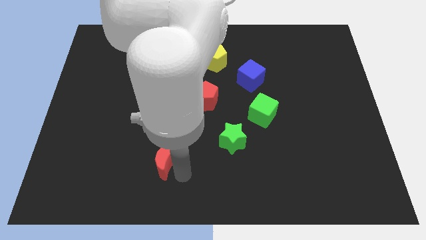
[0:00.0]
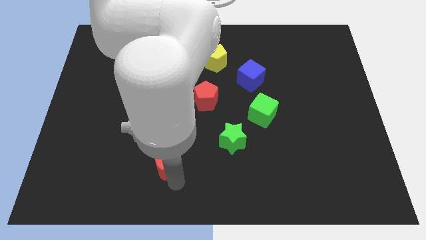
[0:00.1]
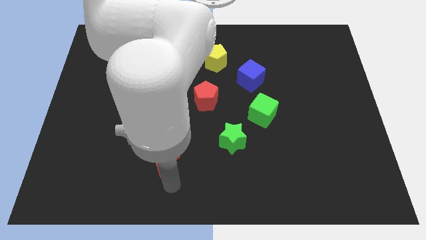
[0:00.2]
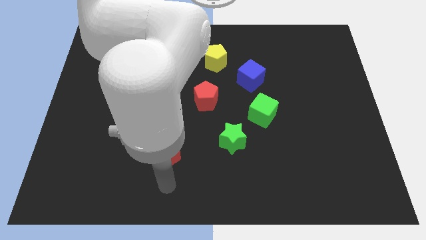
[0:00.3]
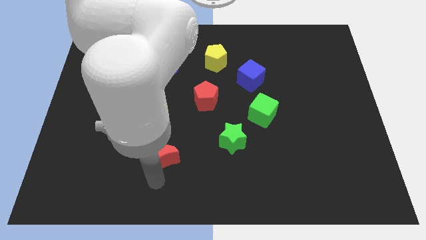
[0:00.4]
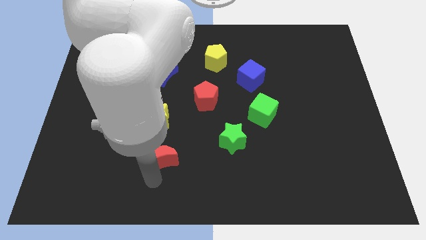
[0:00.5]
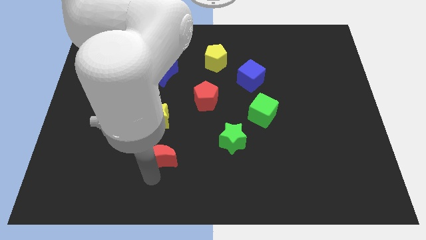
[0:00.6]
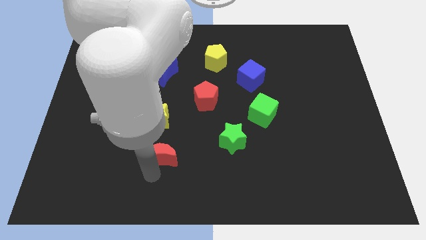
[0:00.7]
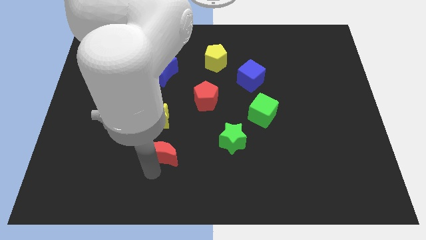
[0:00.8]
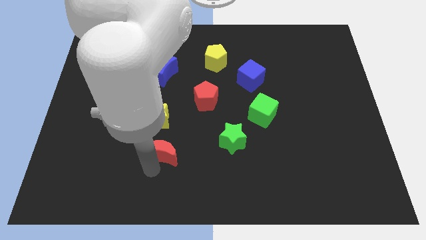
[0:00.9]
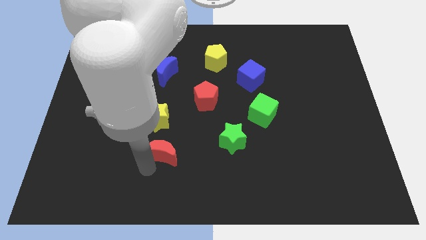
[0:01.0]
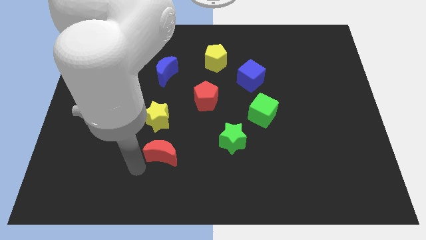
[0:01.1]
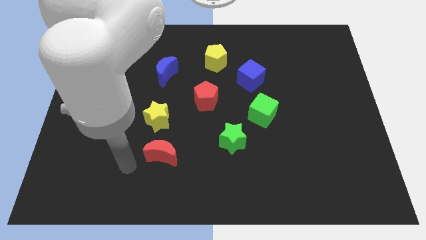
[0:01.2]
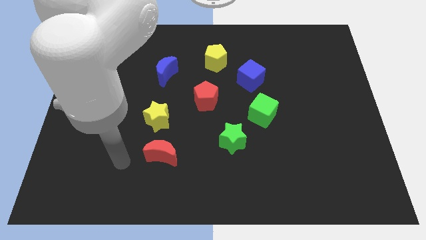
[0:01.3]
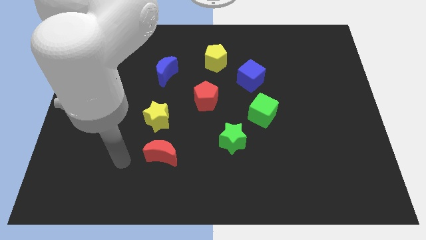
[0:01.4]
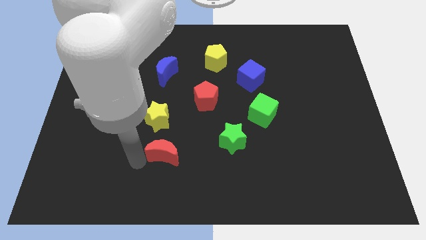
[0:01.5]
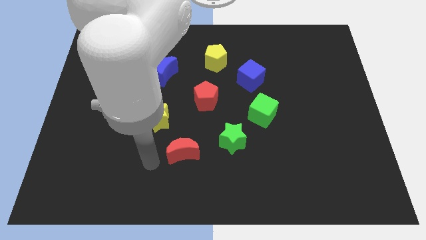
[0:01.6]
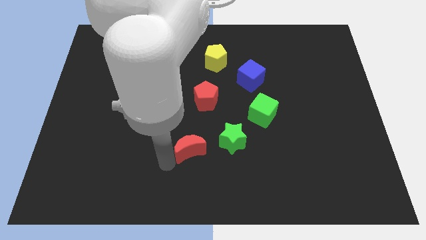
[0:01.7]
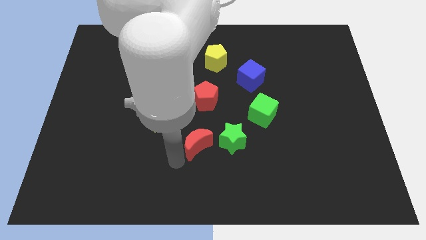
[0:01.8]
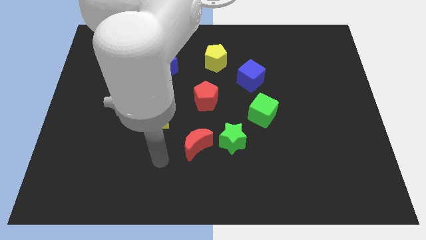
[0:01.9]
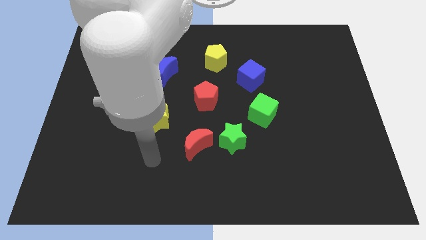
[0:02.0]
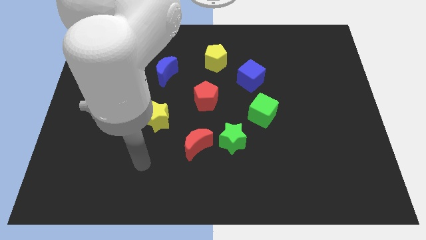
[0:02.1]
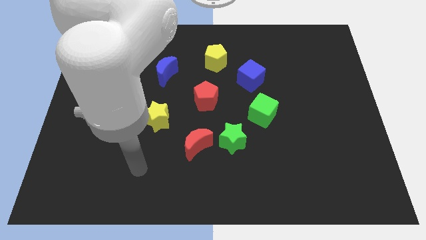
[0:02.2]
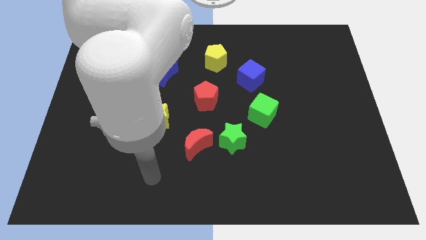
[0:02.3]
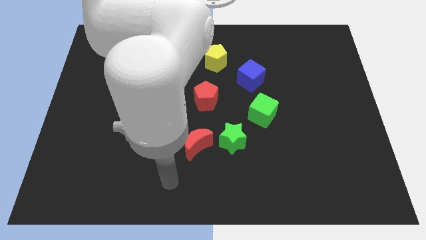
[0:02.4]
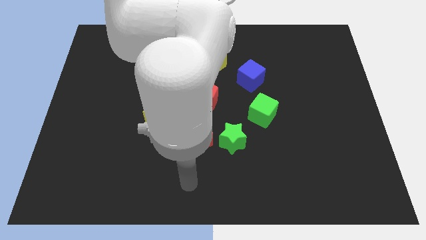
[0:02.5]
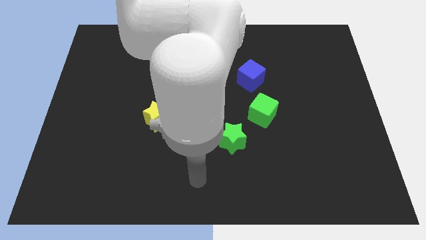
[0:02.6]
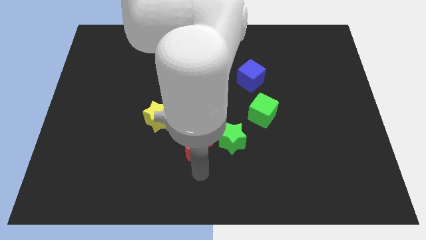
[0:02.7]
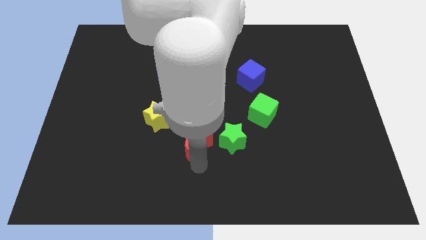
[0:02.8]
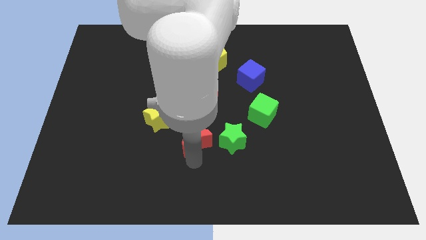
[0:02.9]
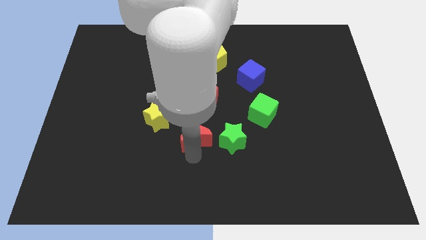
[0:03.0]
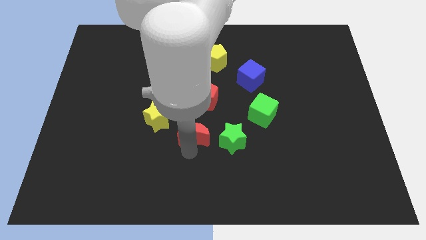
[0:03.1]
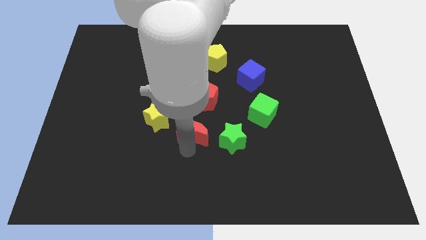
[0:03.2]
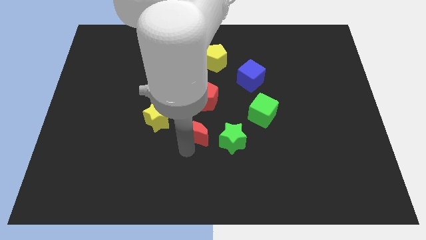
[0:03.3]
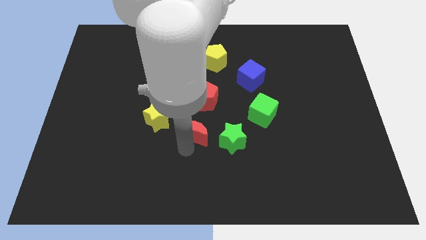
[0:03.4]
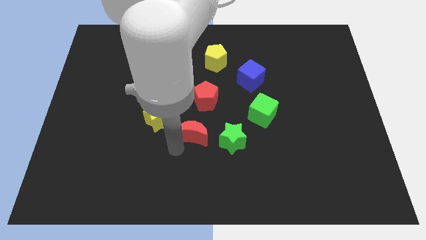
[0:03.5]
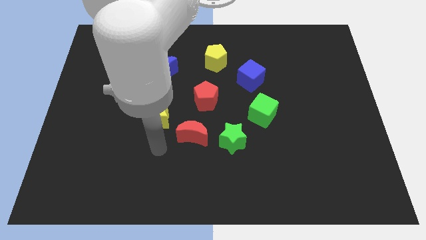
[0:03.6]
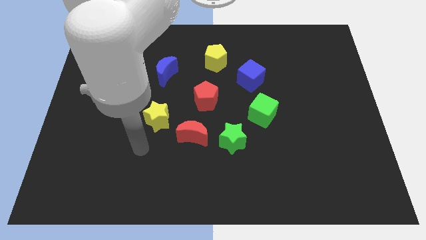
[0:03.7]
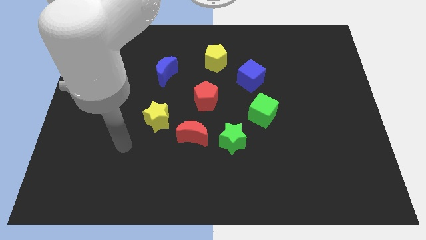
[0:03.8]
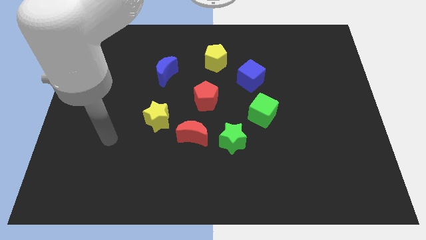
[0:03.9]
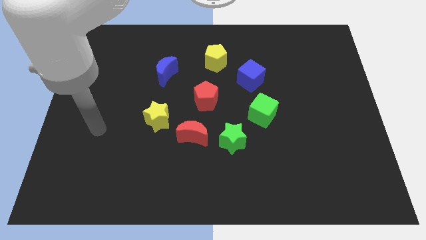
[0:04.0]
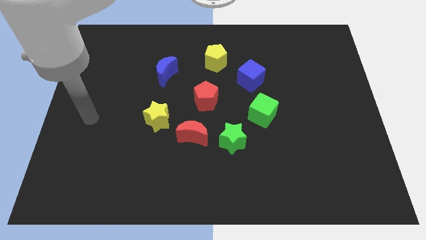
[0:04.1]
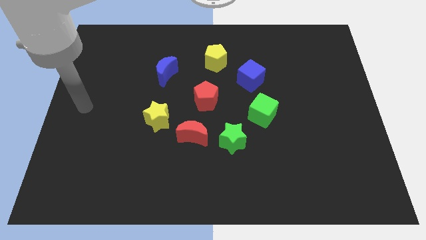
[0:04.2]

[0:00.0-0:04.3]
slide the red crescent vertically below the red pentagon

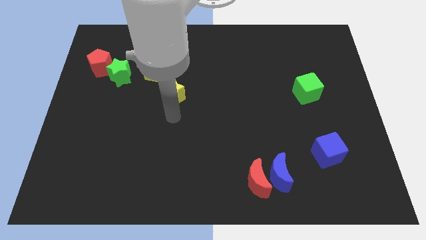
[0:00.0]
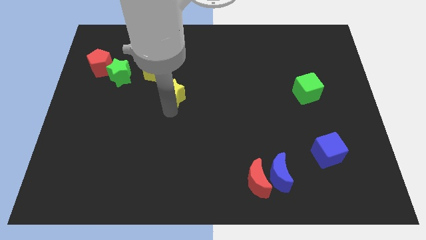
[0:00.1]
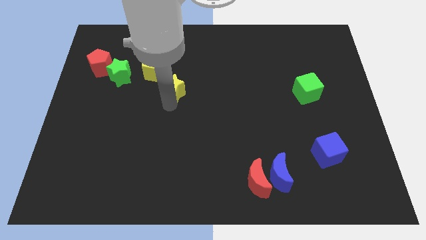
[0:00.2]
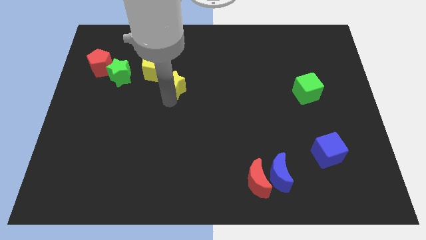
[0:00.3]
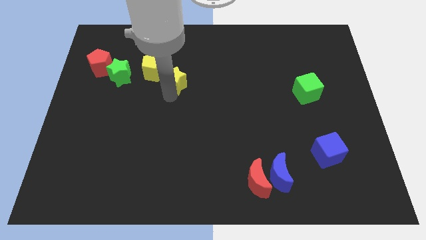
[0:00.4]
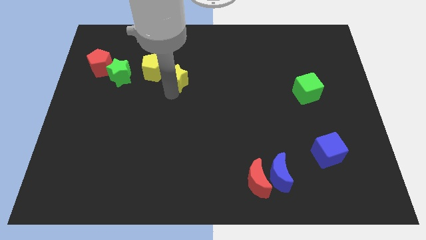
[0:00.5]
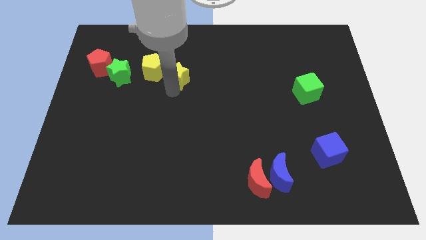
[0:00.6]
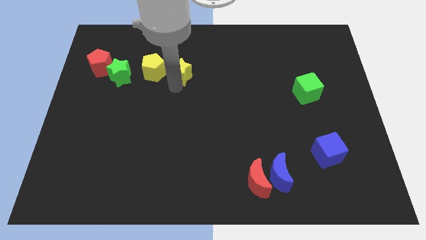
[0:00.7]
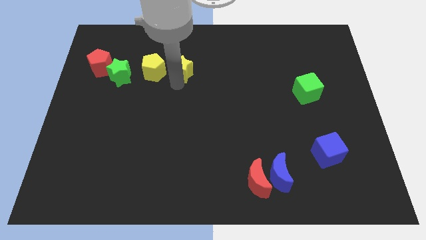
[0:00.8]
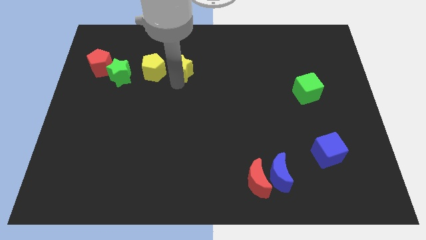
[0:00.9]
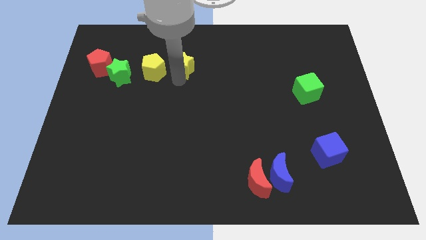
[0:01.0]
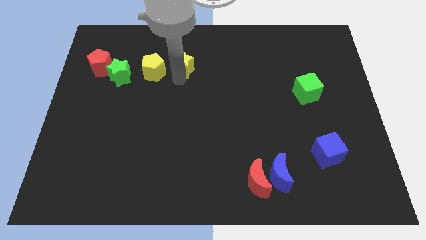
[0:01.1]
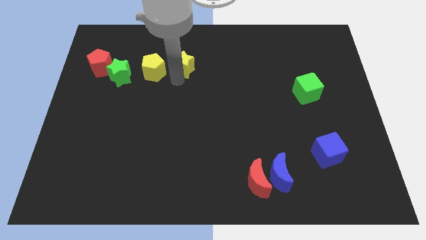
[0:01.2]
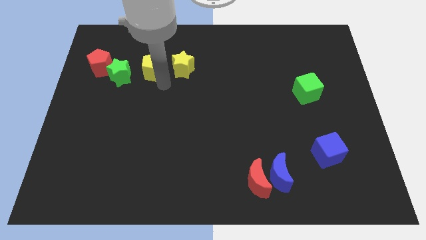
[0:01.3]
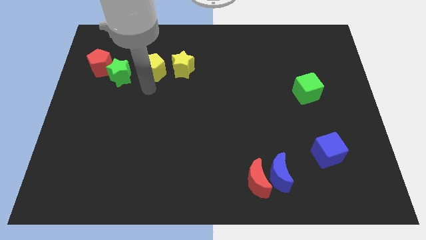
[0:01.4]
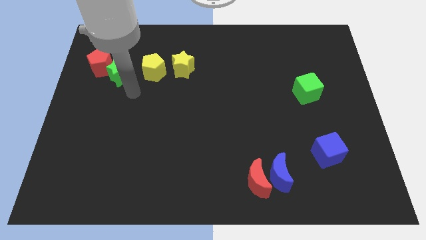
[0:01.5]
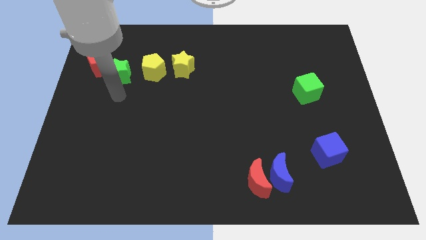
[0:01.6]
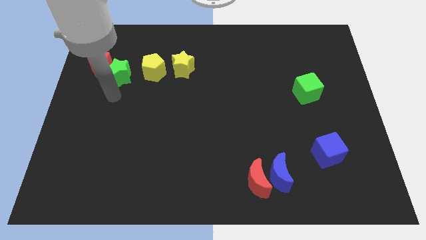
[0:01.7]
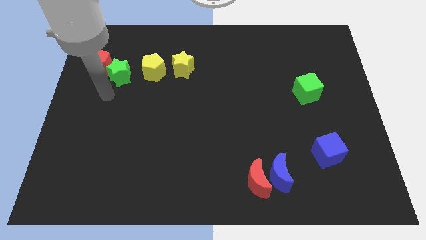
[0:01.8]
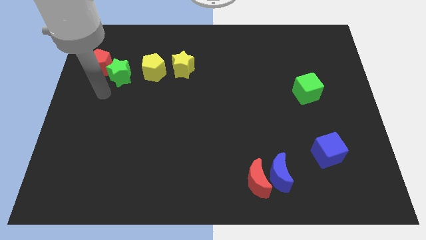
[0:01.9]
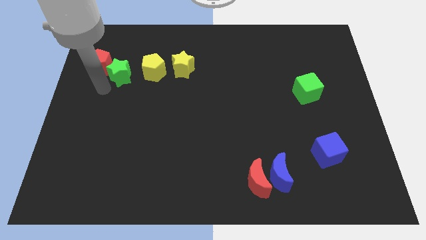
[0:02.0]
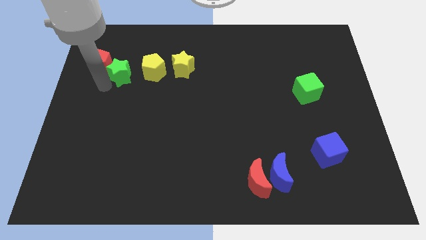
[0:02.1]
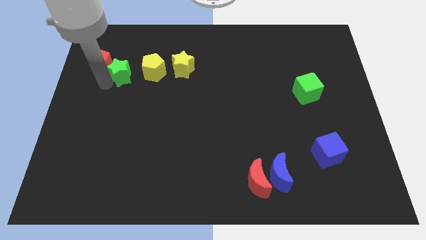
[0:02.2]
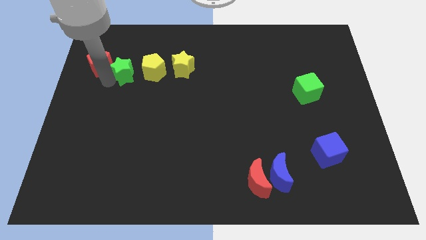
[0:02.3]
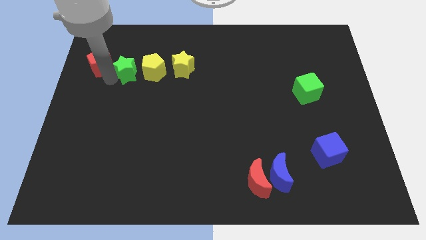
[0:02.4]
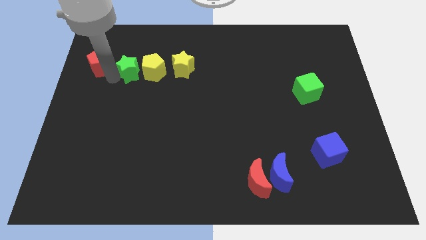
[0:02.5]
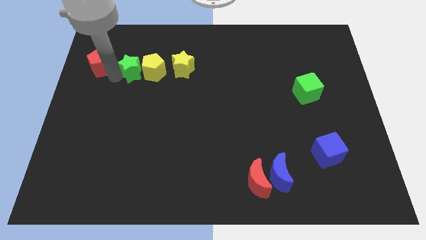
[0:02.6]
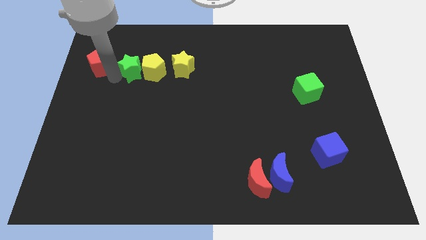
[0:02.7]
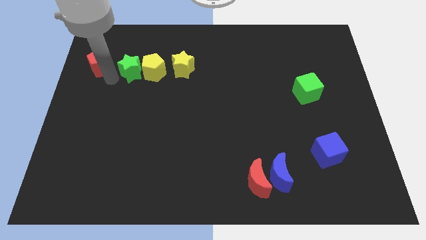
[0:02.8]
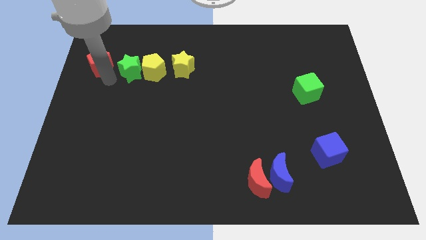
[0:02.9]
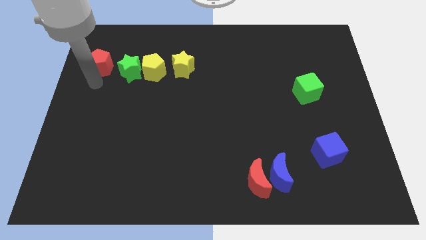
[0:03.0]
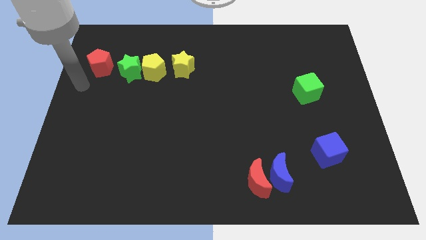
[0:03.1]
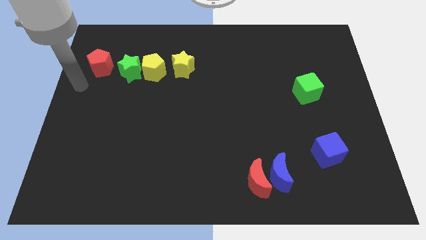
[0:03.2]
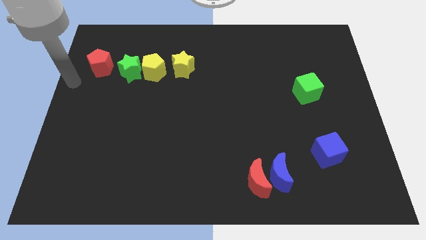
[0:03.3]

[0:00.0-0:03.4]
place green star beside yellow pentagon

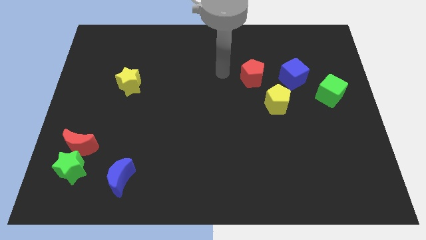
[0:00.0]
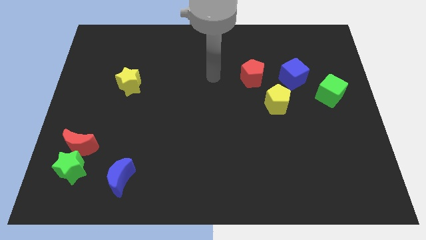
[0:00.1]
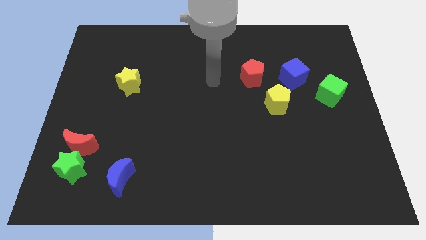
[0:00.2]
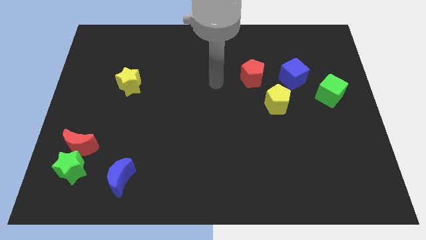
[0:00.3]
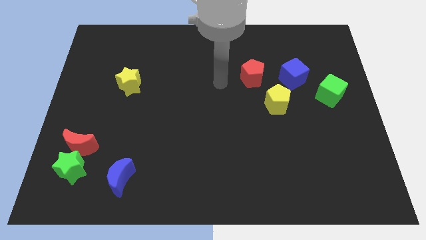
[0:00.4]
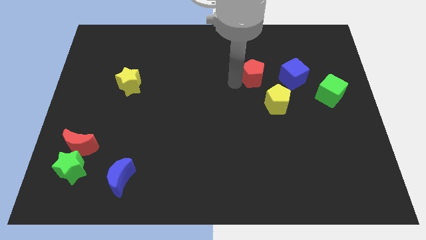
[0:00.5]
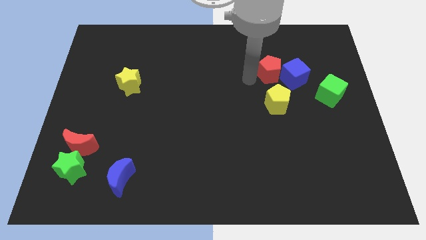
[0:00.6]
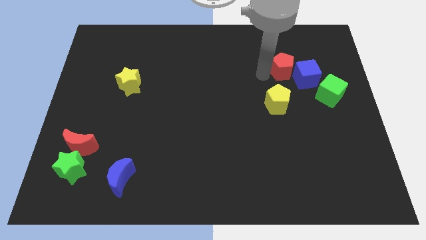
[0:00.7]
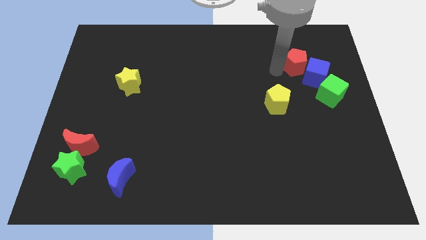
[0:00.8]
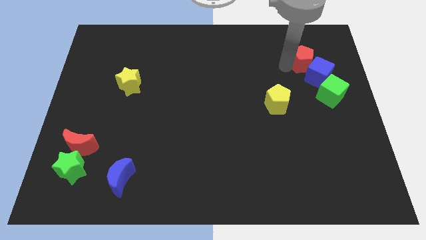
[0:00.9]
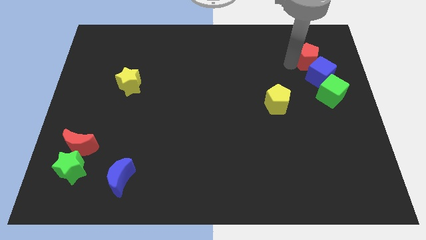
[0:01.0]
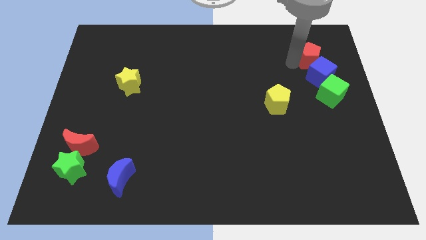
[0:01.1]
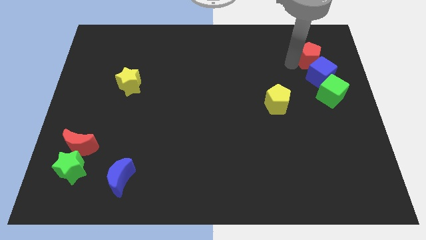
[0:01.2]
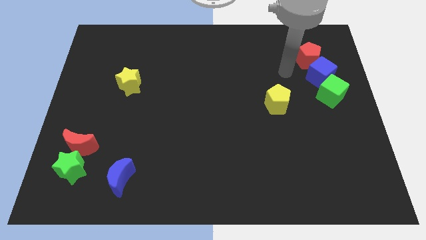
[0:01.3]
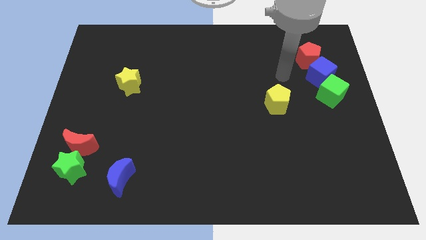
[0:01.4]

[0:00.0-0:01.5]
push the red pentagon into the blue cube
